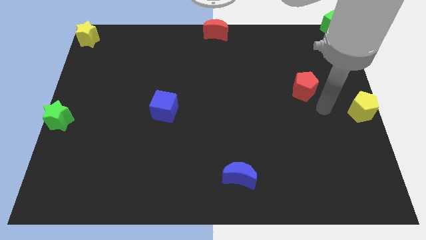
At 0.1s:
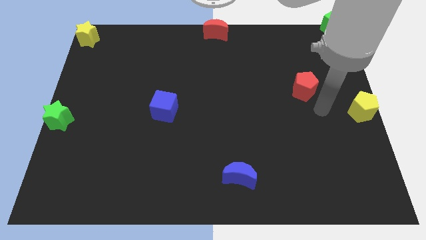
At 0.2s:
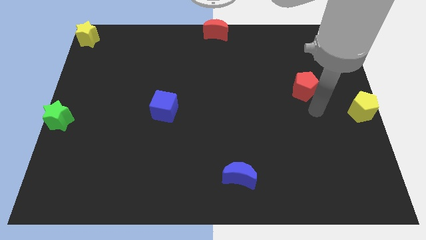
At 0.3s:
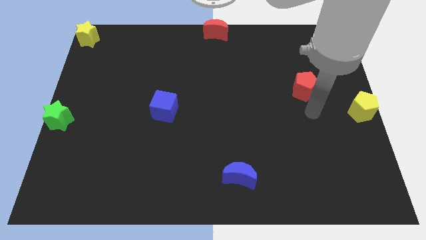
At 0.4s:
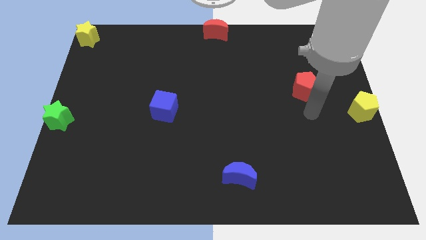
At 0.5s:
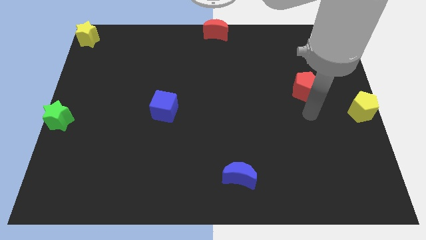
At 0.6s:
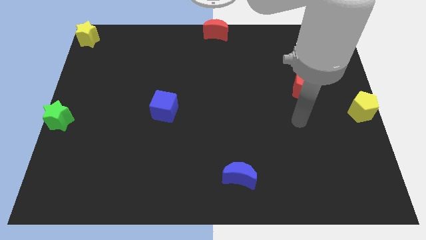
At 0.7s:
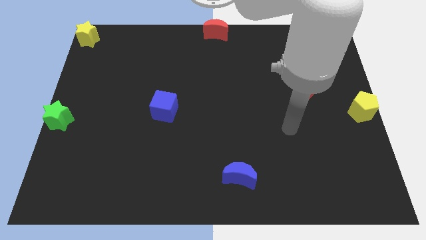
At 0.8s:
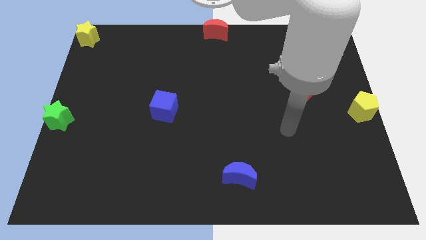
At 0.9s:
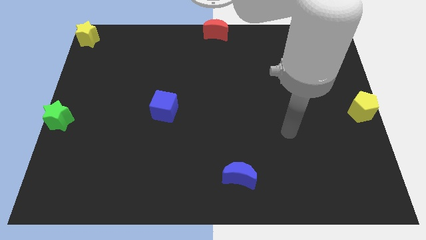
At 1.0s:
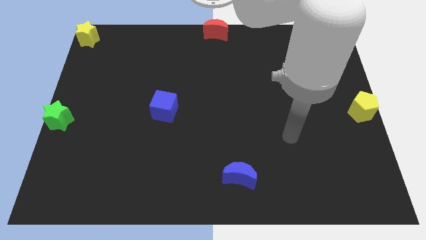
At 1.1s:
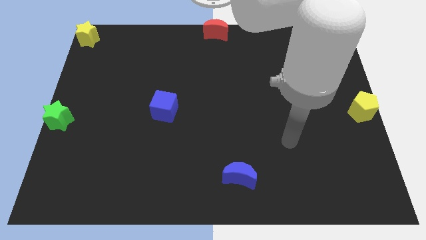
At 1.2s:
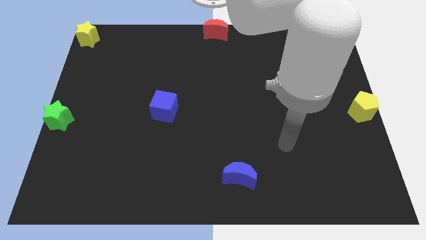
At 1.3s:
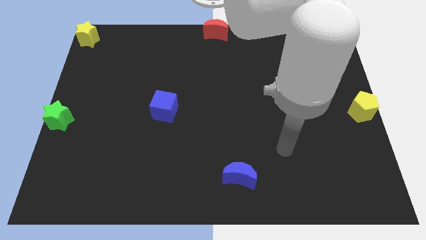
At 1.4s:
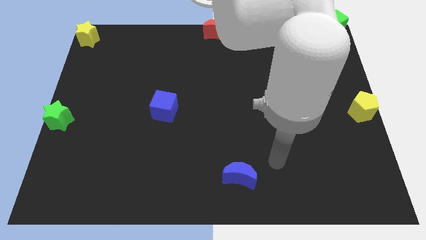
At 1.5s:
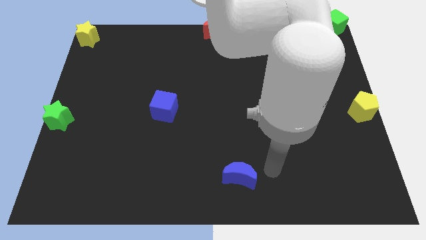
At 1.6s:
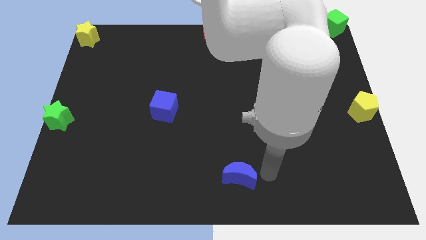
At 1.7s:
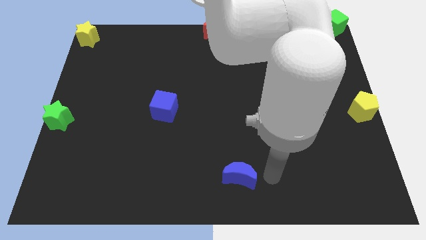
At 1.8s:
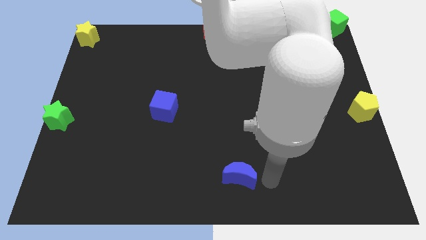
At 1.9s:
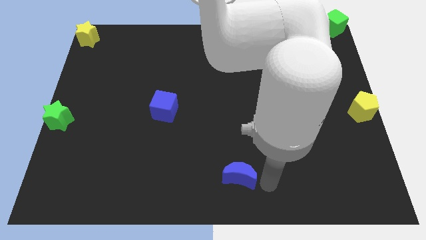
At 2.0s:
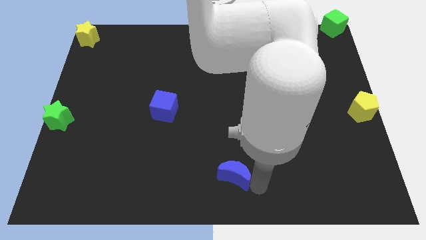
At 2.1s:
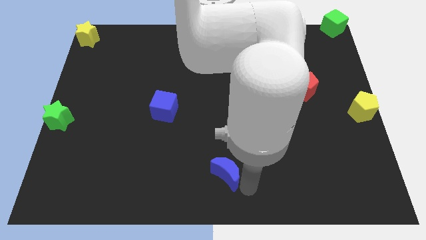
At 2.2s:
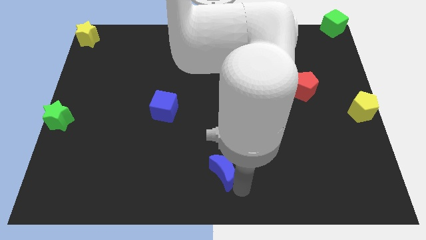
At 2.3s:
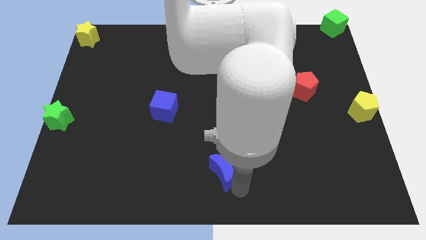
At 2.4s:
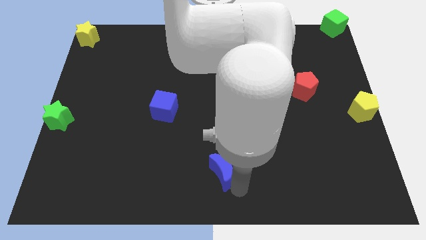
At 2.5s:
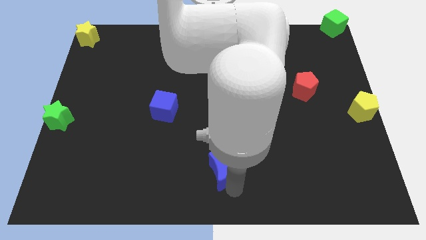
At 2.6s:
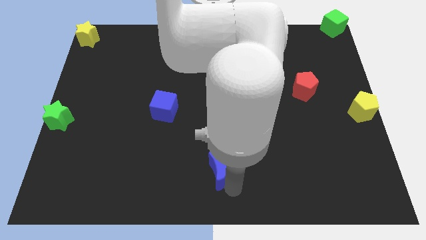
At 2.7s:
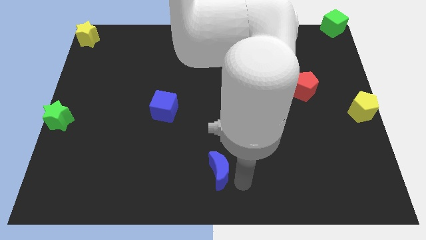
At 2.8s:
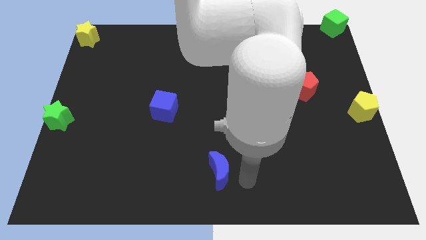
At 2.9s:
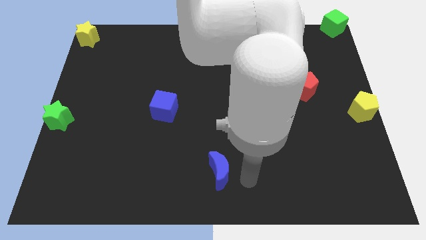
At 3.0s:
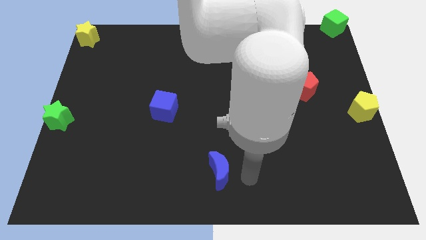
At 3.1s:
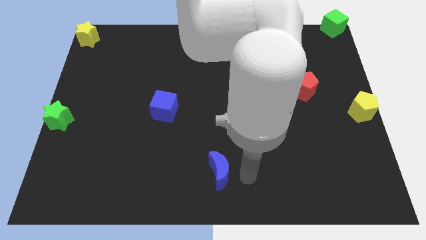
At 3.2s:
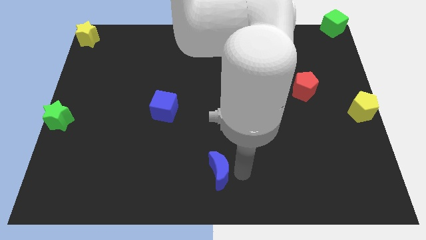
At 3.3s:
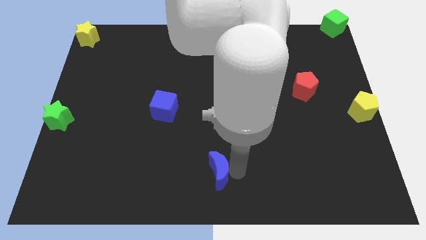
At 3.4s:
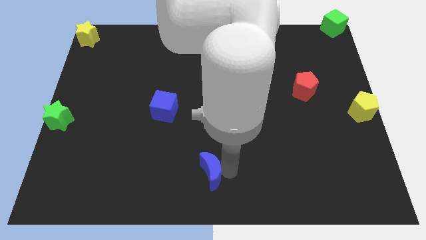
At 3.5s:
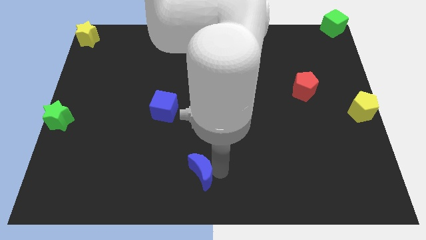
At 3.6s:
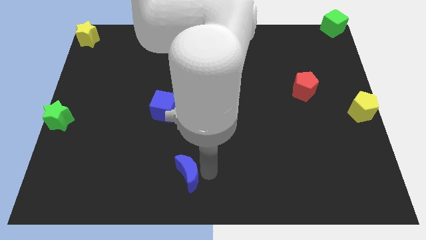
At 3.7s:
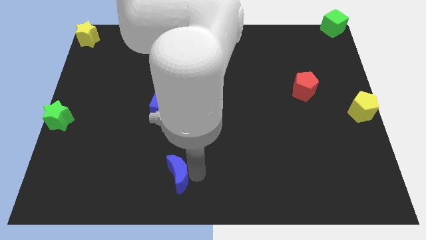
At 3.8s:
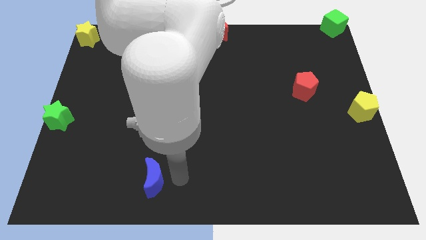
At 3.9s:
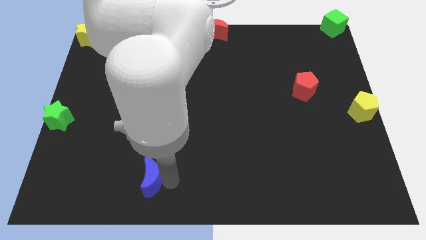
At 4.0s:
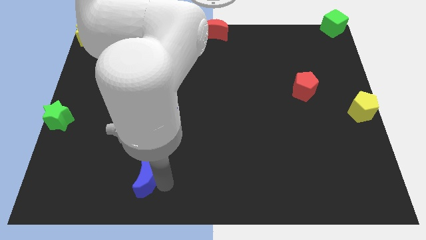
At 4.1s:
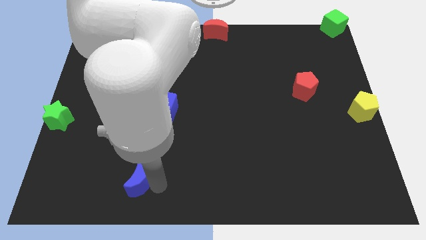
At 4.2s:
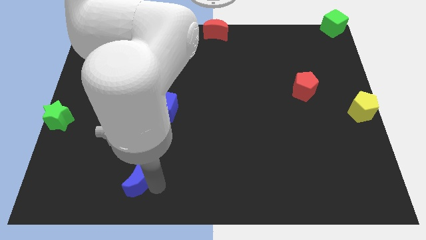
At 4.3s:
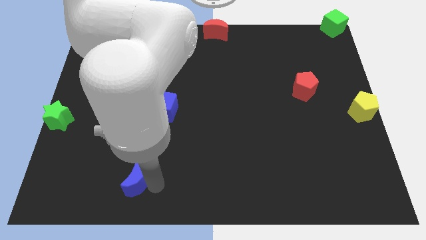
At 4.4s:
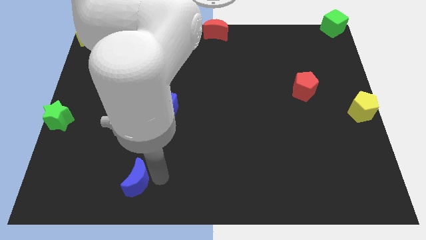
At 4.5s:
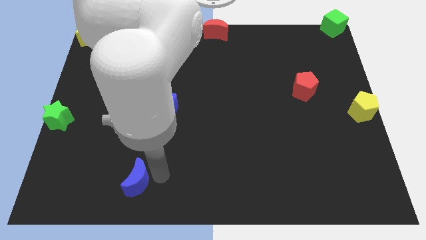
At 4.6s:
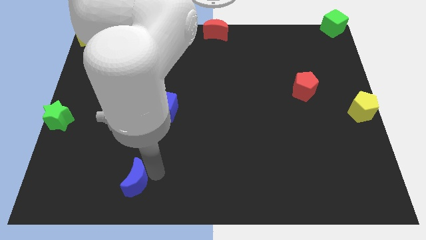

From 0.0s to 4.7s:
push the blue crescent to the left of the board

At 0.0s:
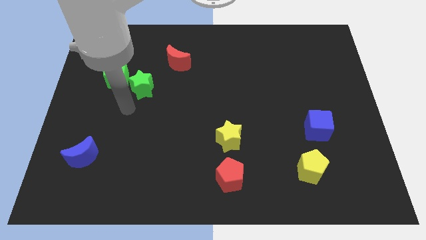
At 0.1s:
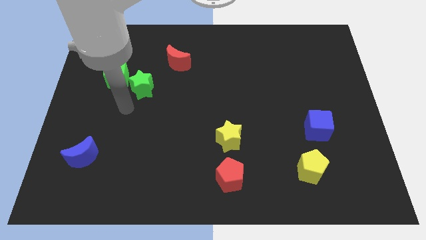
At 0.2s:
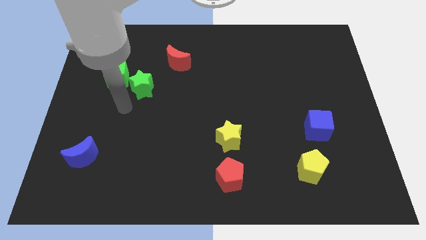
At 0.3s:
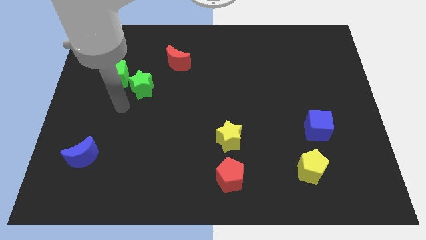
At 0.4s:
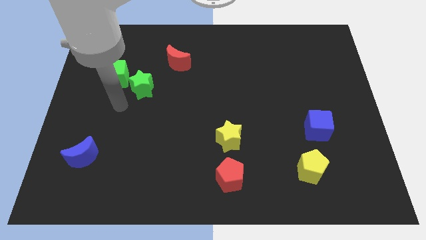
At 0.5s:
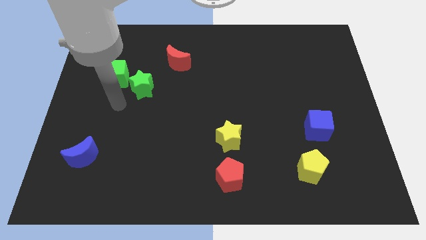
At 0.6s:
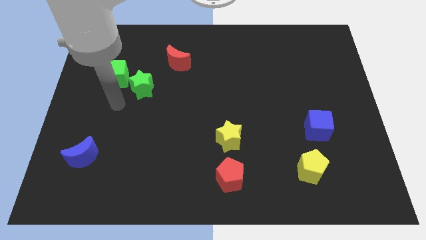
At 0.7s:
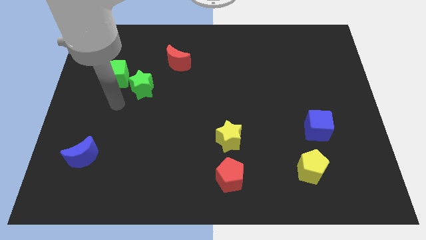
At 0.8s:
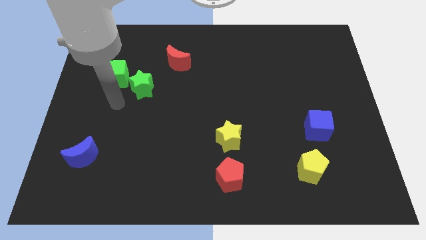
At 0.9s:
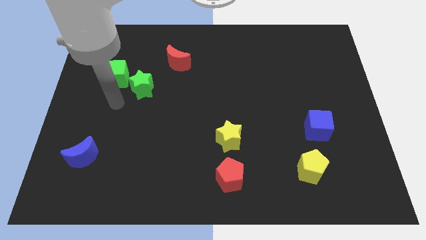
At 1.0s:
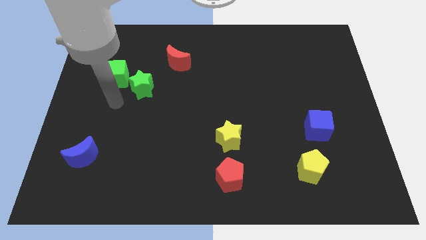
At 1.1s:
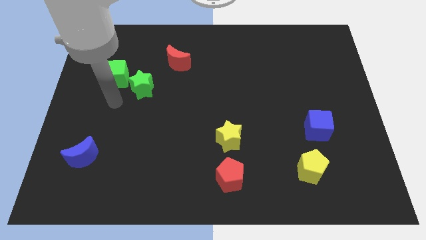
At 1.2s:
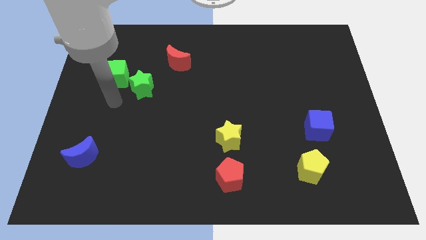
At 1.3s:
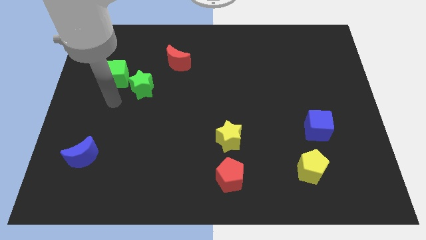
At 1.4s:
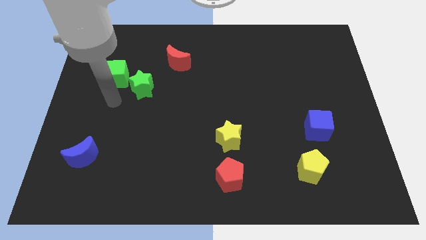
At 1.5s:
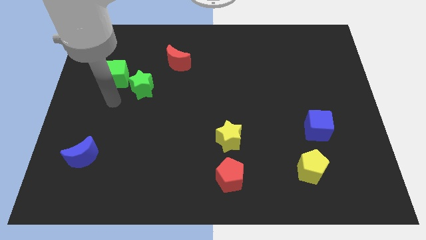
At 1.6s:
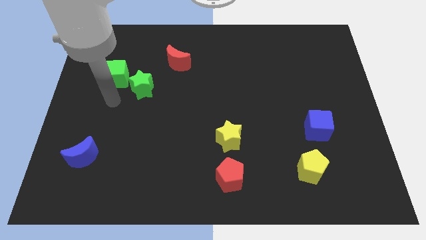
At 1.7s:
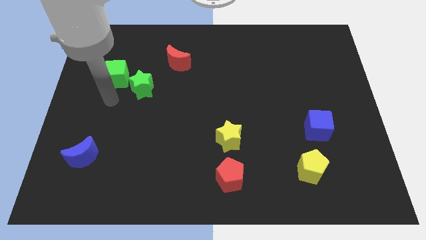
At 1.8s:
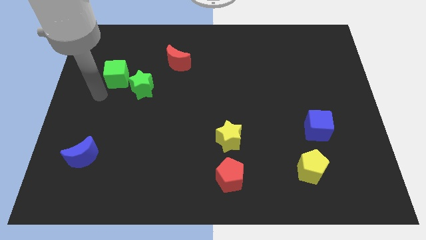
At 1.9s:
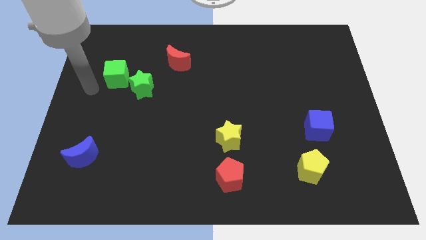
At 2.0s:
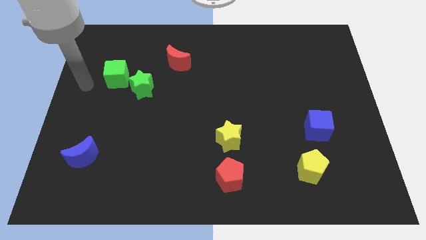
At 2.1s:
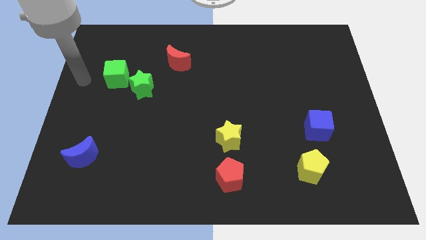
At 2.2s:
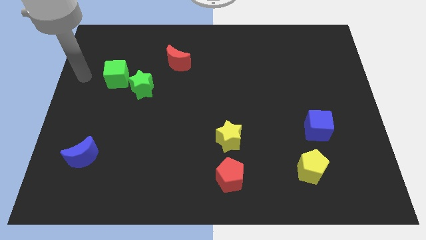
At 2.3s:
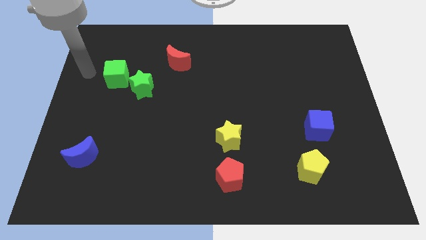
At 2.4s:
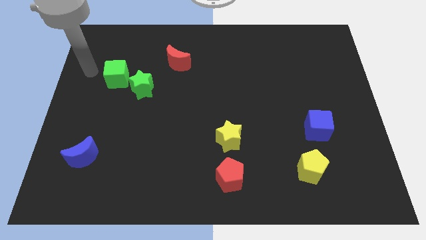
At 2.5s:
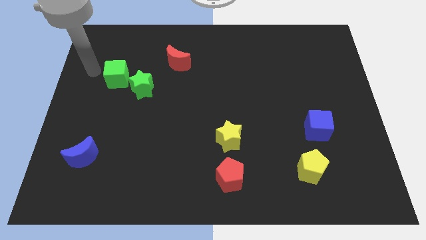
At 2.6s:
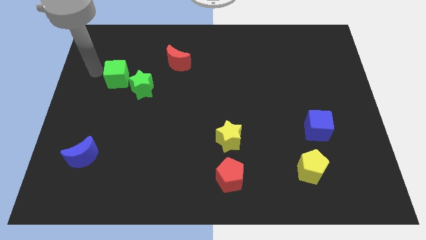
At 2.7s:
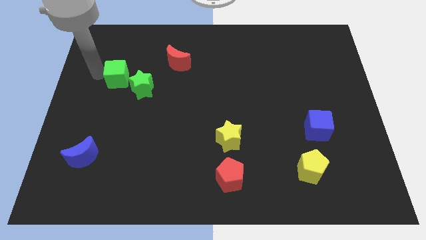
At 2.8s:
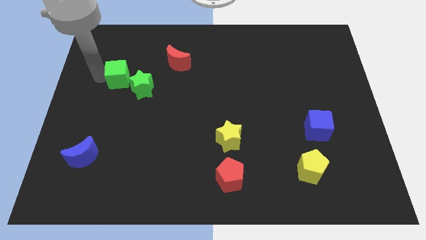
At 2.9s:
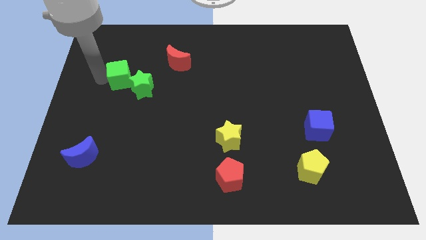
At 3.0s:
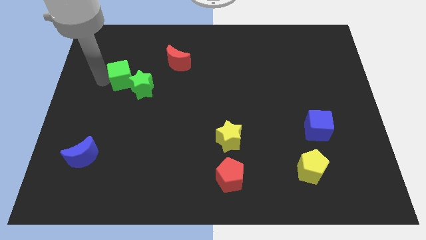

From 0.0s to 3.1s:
tap the arm on the left side of the green cube

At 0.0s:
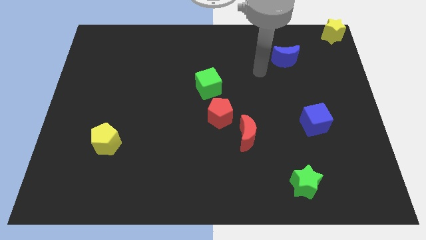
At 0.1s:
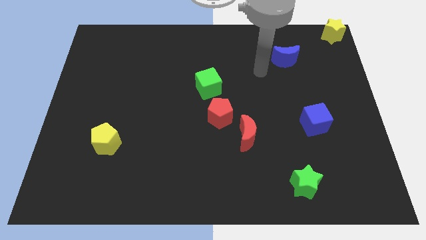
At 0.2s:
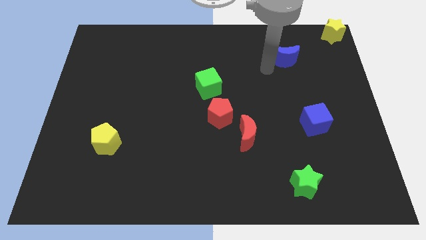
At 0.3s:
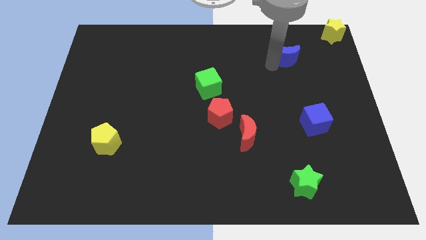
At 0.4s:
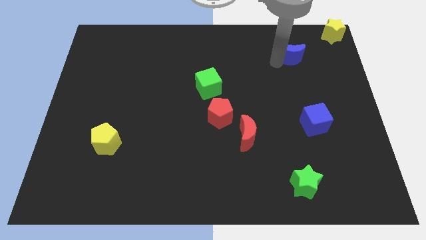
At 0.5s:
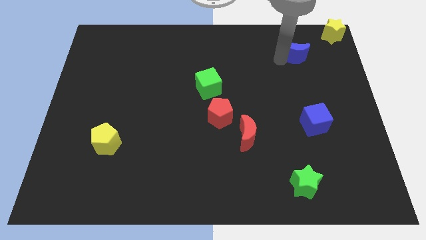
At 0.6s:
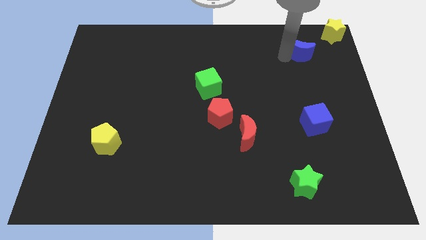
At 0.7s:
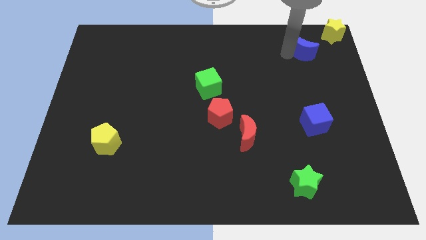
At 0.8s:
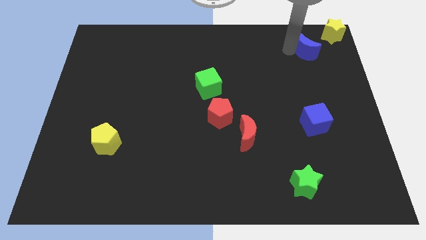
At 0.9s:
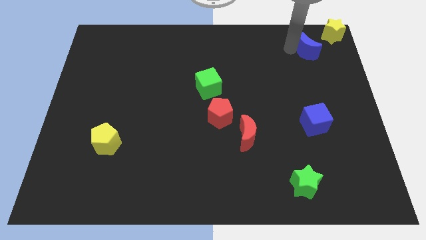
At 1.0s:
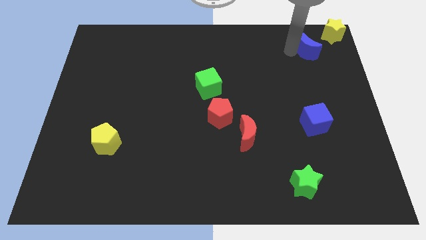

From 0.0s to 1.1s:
move blue crescent towards the top right of the board
